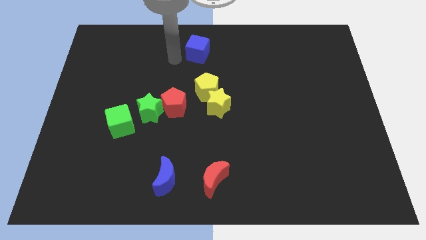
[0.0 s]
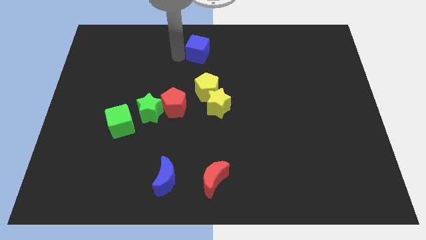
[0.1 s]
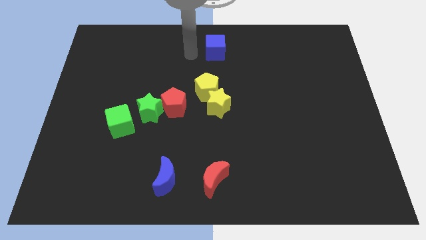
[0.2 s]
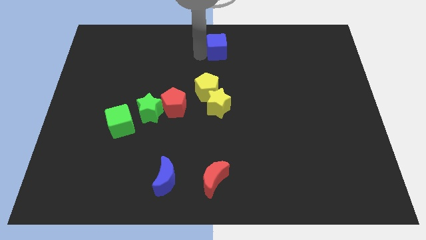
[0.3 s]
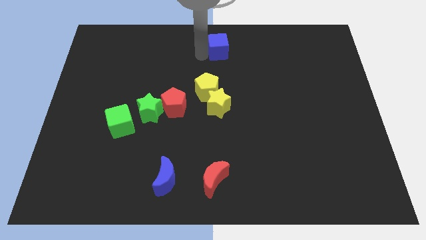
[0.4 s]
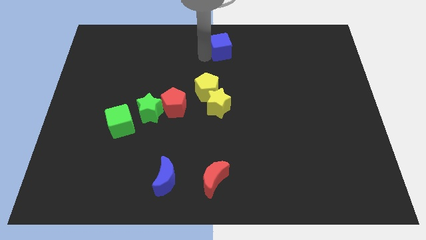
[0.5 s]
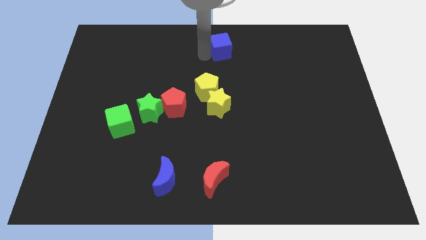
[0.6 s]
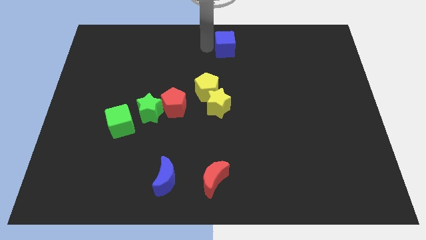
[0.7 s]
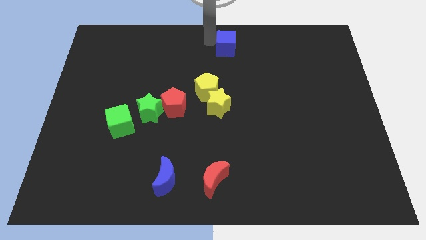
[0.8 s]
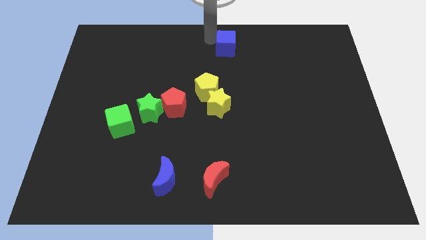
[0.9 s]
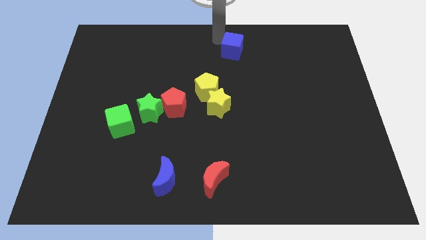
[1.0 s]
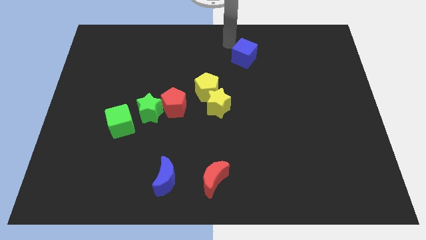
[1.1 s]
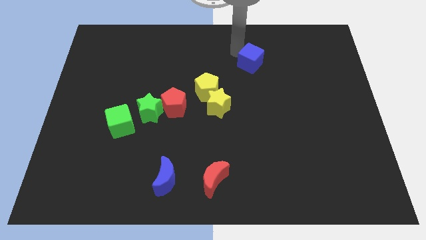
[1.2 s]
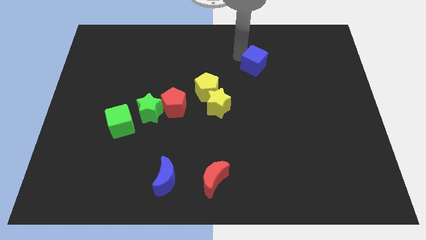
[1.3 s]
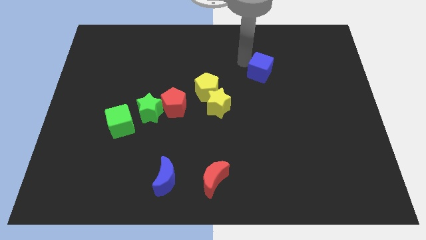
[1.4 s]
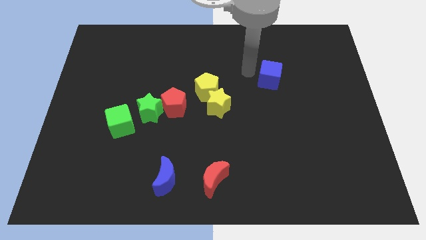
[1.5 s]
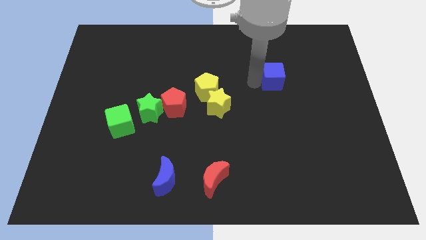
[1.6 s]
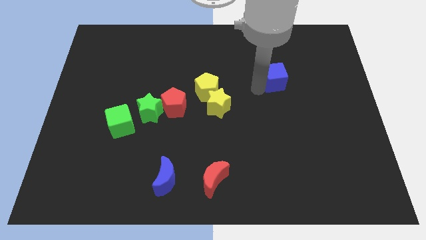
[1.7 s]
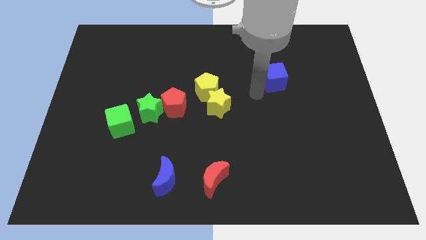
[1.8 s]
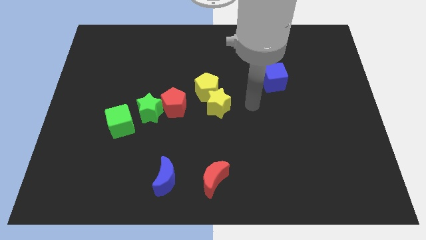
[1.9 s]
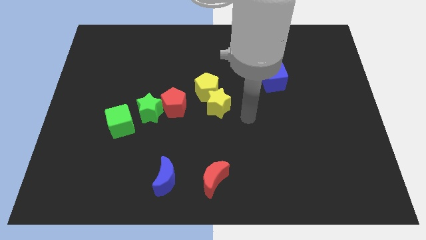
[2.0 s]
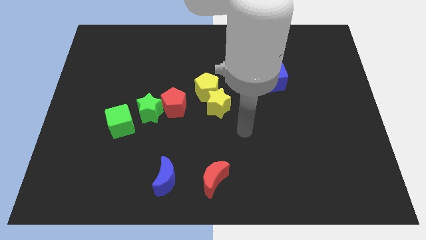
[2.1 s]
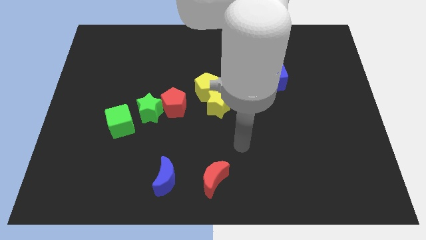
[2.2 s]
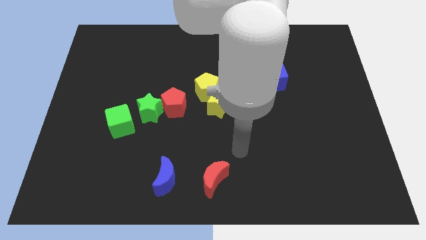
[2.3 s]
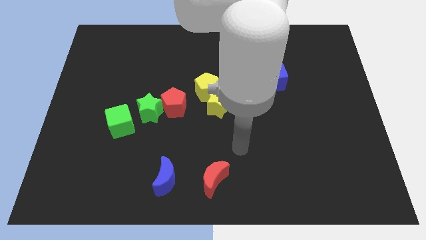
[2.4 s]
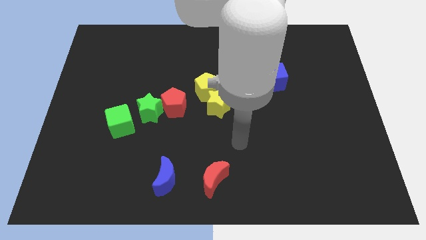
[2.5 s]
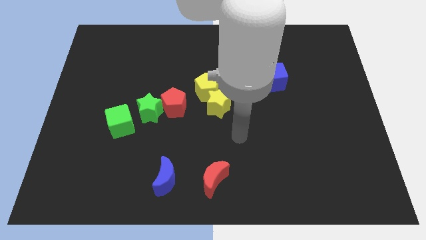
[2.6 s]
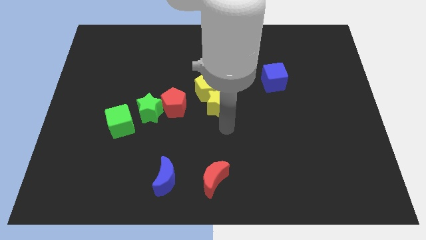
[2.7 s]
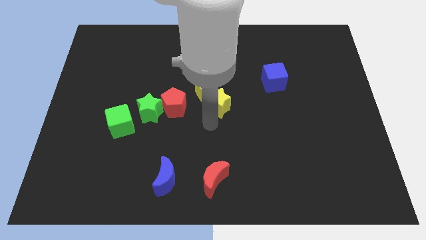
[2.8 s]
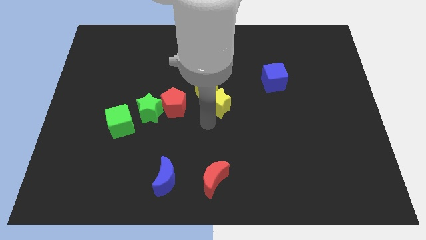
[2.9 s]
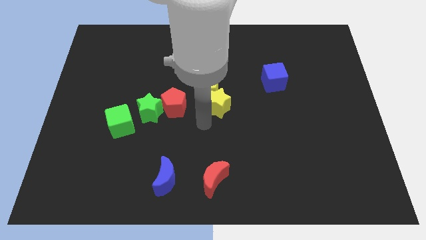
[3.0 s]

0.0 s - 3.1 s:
move the blue cube to the right side of the yellow pentagon

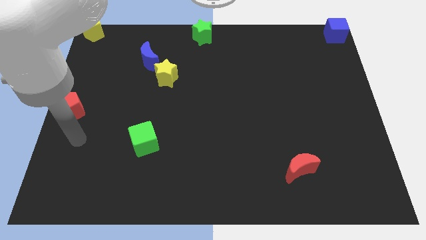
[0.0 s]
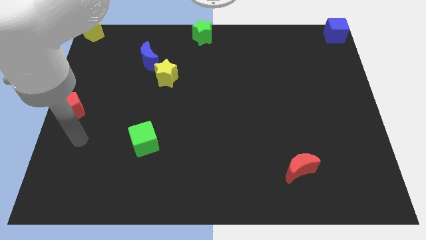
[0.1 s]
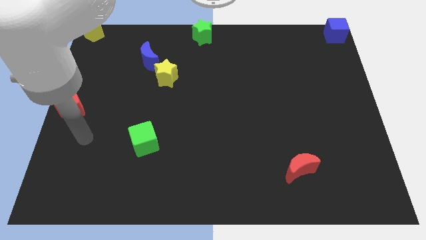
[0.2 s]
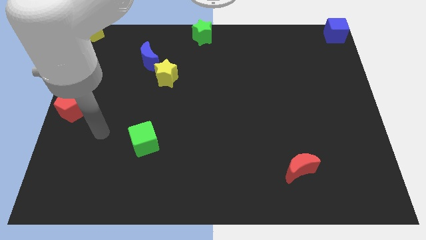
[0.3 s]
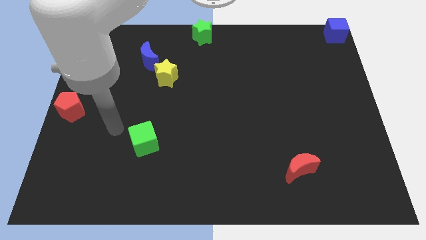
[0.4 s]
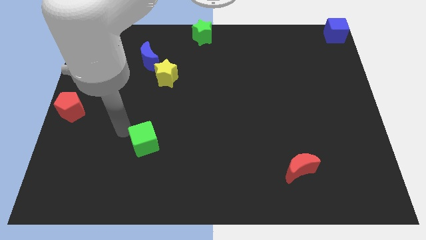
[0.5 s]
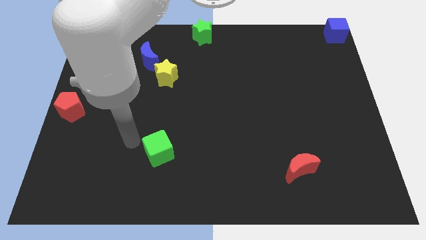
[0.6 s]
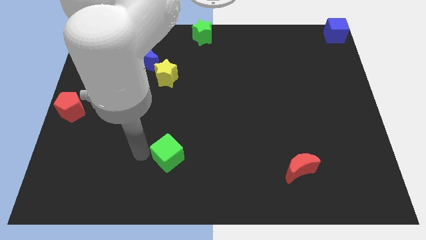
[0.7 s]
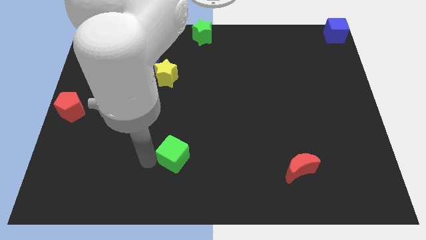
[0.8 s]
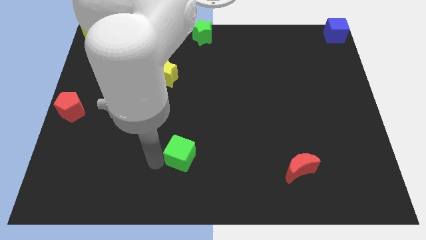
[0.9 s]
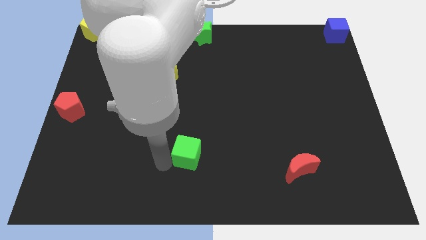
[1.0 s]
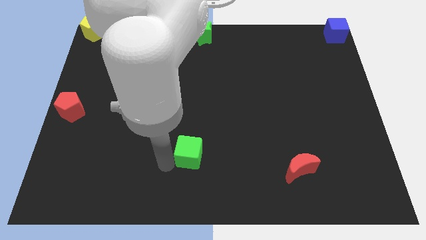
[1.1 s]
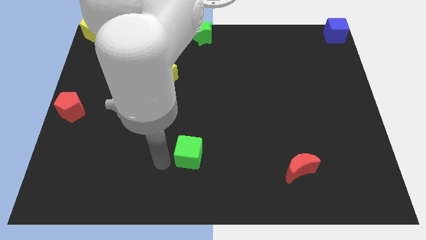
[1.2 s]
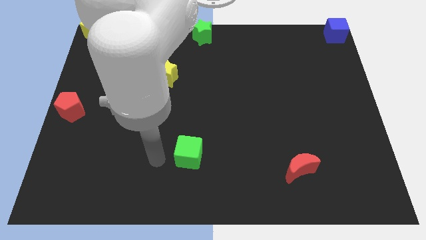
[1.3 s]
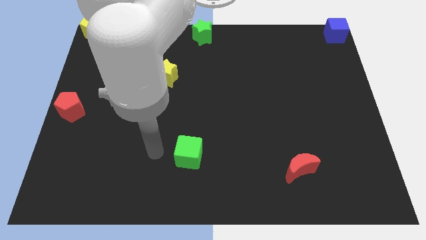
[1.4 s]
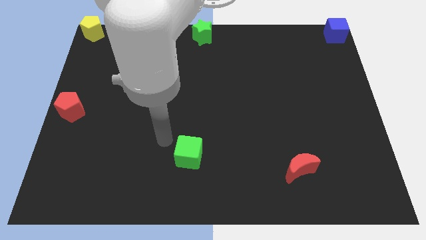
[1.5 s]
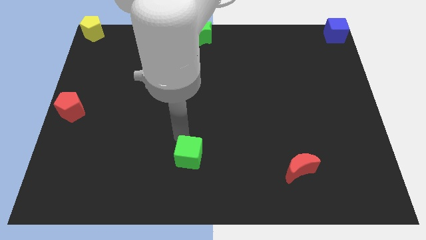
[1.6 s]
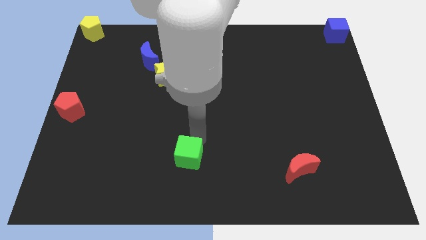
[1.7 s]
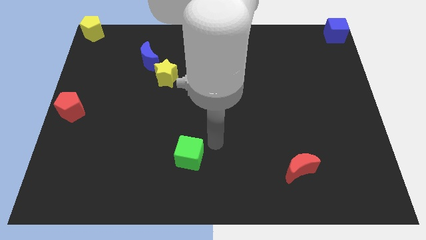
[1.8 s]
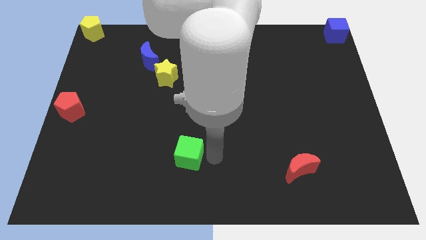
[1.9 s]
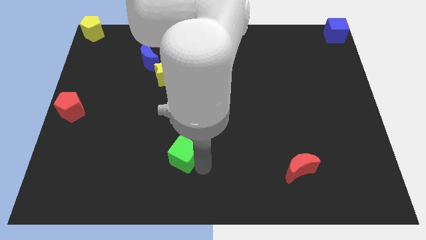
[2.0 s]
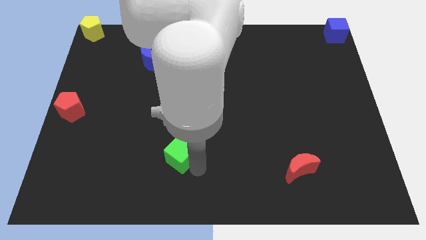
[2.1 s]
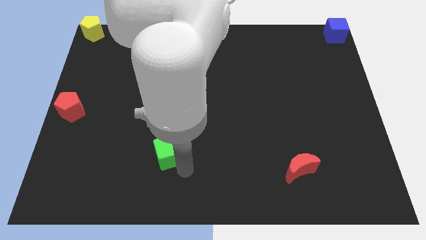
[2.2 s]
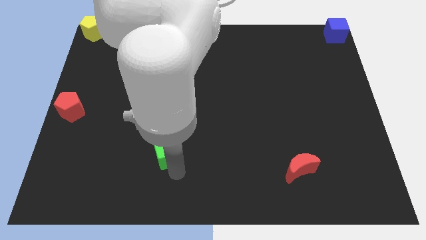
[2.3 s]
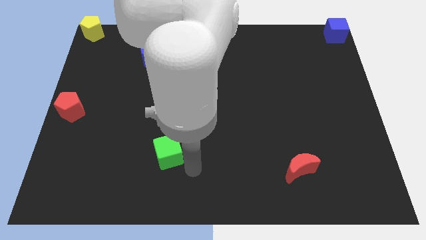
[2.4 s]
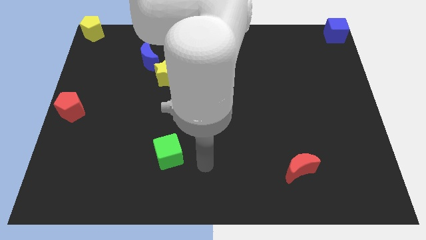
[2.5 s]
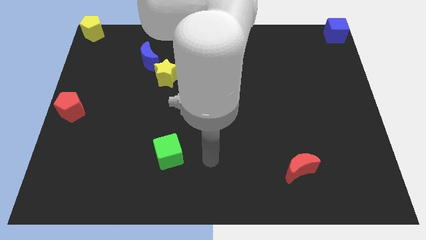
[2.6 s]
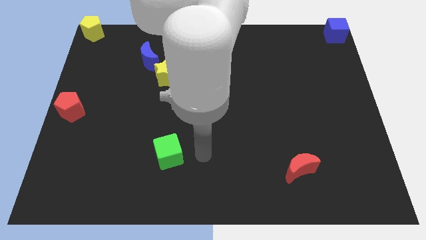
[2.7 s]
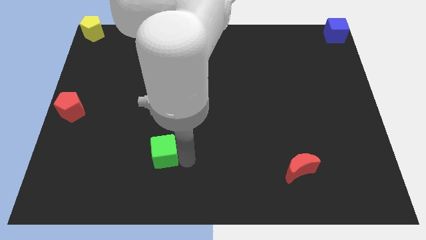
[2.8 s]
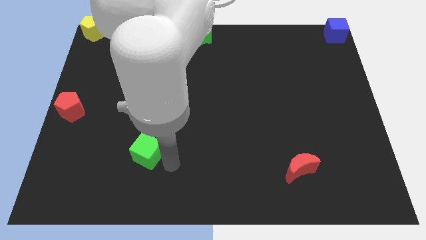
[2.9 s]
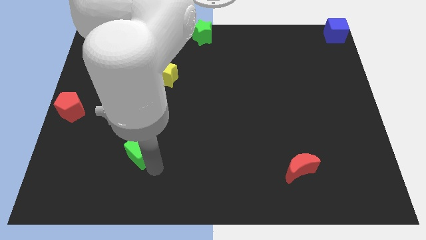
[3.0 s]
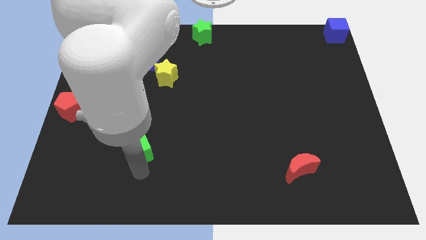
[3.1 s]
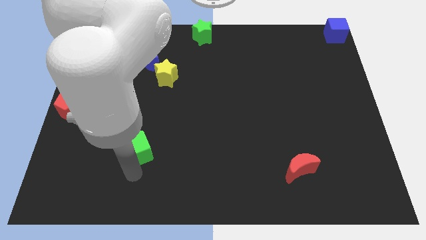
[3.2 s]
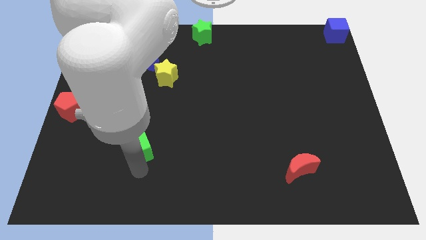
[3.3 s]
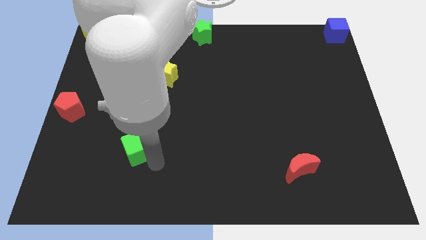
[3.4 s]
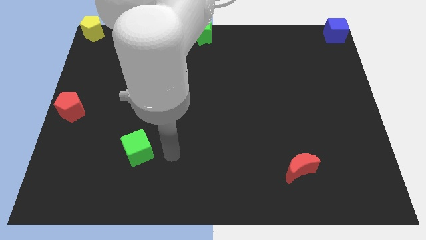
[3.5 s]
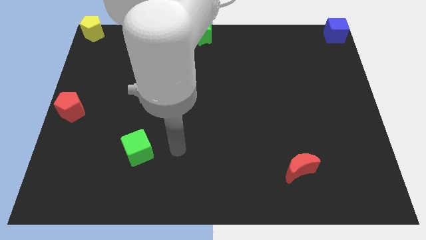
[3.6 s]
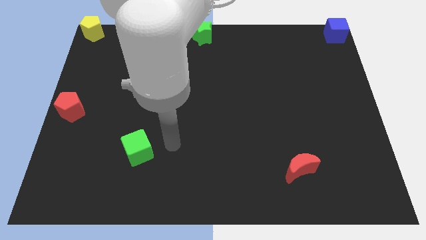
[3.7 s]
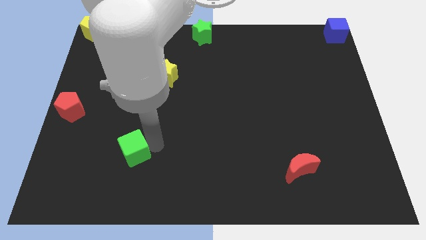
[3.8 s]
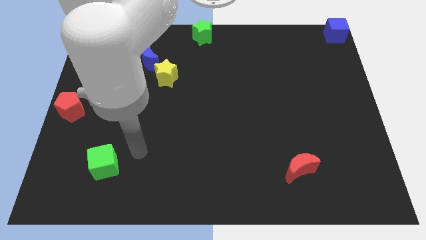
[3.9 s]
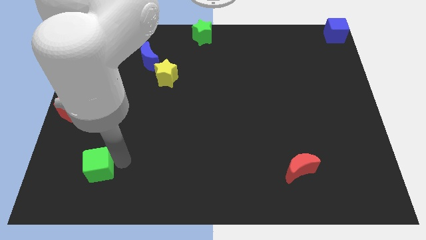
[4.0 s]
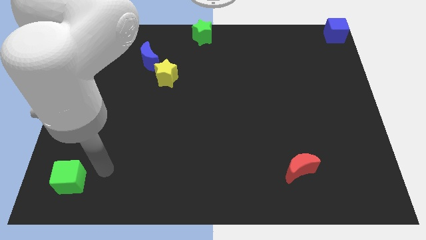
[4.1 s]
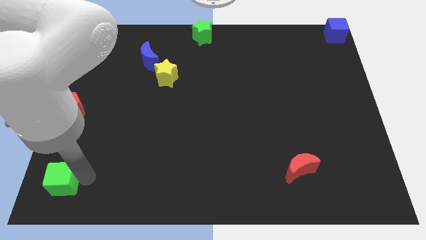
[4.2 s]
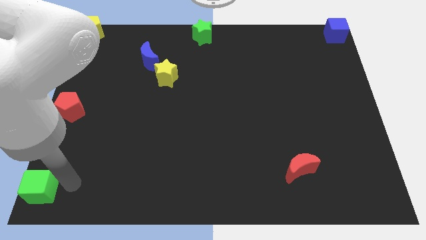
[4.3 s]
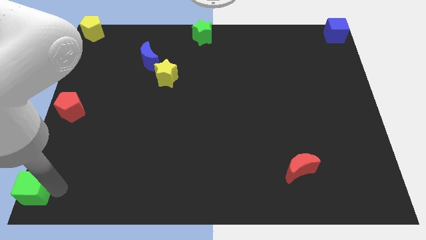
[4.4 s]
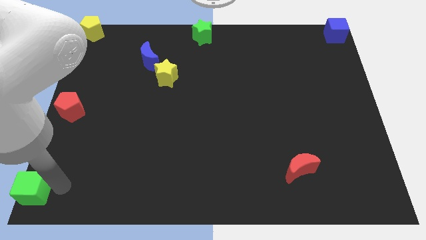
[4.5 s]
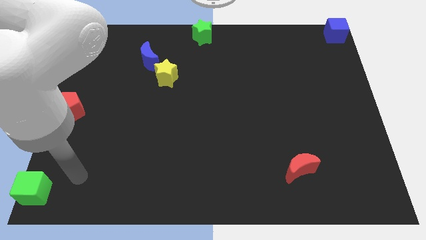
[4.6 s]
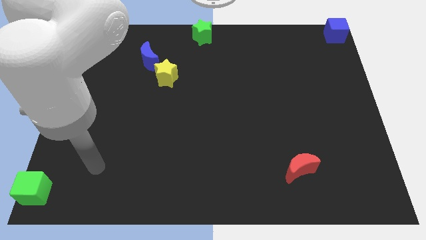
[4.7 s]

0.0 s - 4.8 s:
place the green cube at the bottom left corner of the board

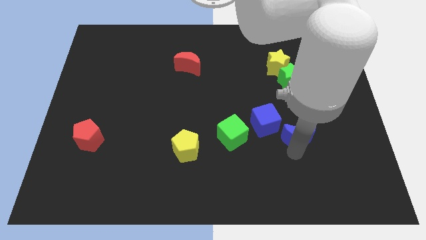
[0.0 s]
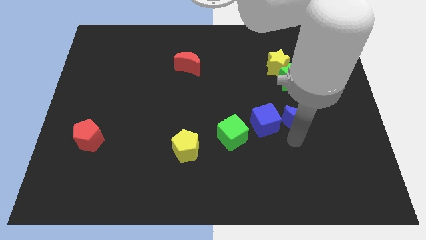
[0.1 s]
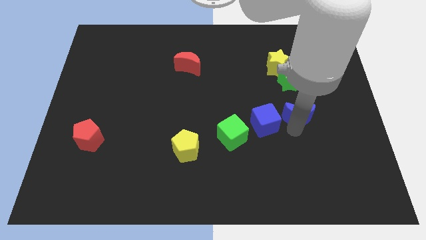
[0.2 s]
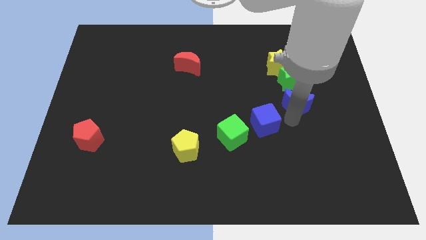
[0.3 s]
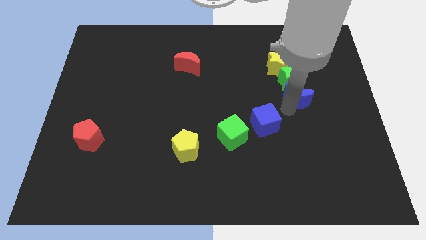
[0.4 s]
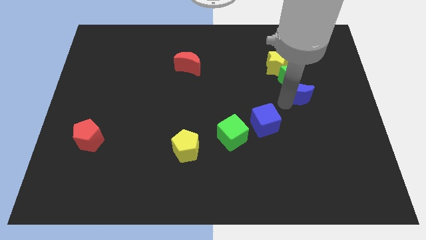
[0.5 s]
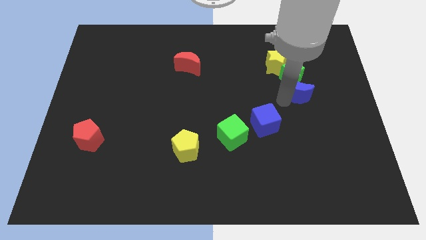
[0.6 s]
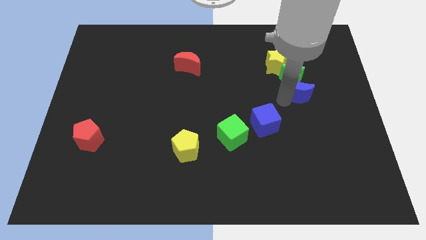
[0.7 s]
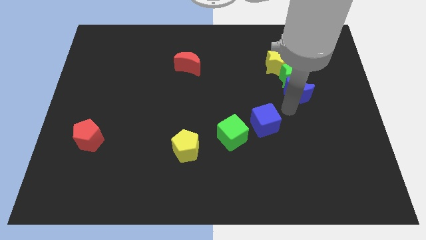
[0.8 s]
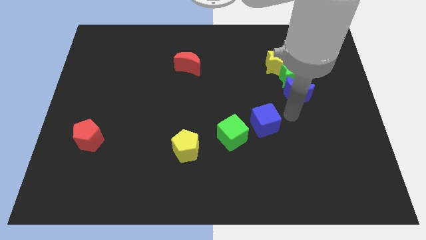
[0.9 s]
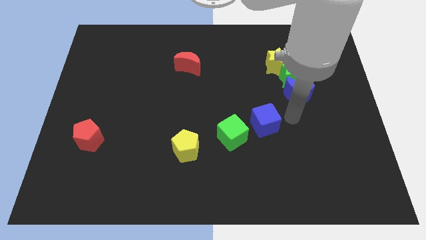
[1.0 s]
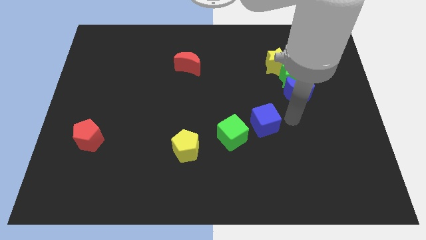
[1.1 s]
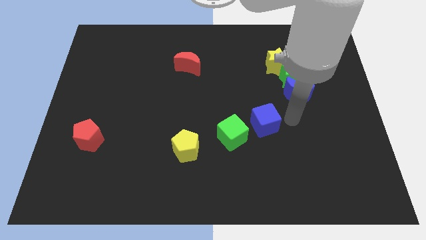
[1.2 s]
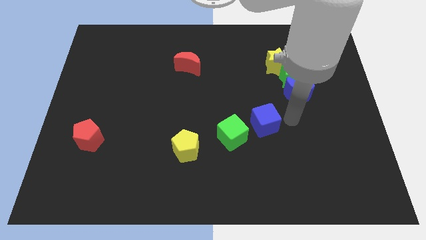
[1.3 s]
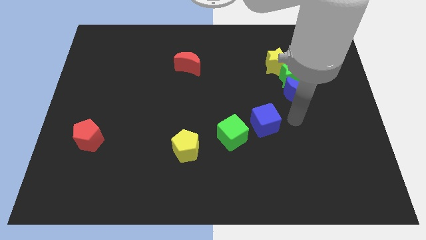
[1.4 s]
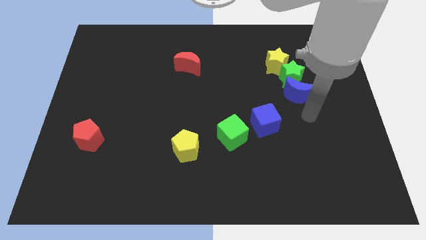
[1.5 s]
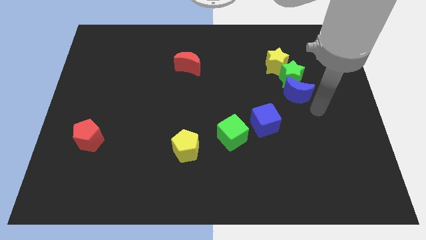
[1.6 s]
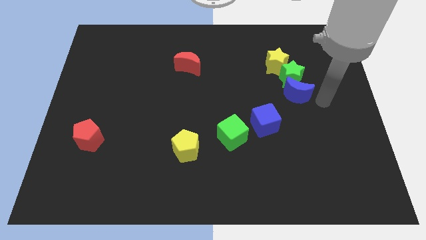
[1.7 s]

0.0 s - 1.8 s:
move the blue crescent into the green star
